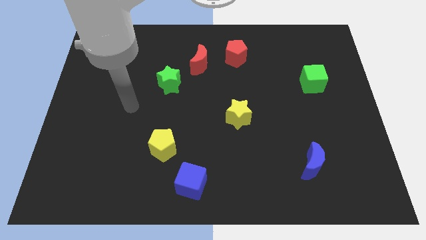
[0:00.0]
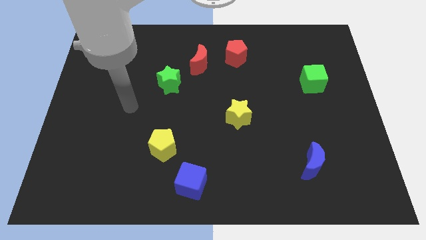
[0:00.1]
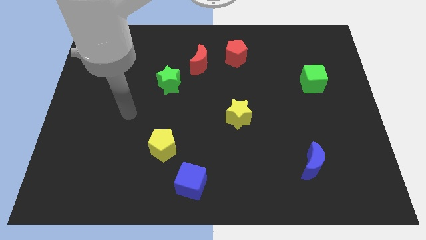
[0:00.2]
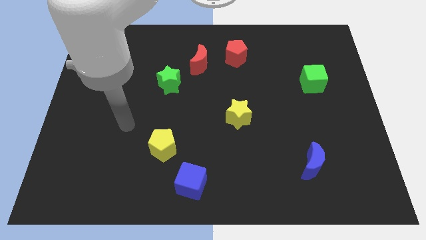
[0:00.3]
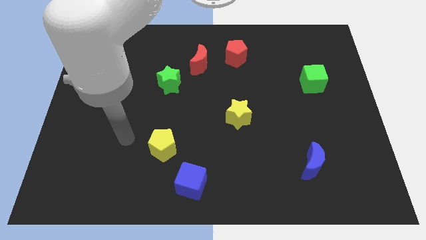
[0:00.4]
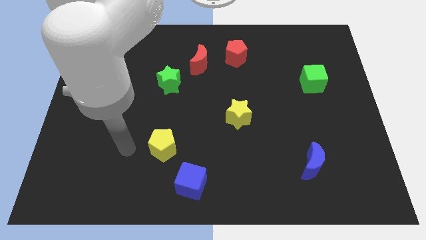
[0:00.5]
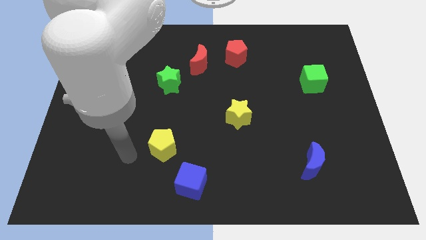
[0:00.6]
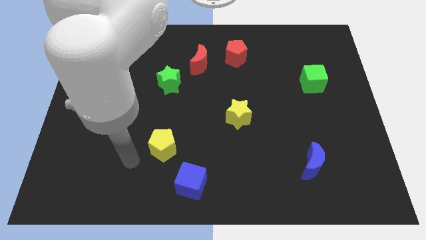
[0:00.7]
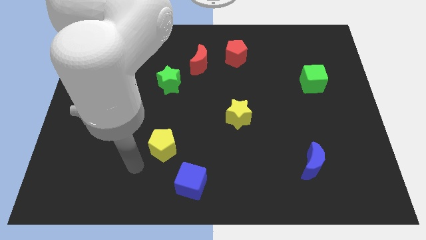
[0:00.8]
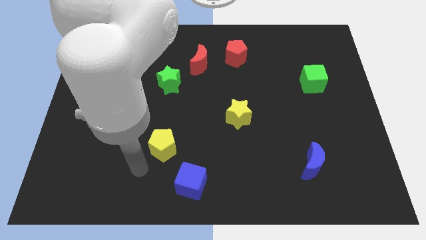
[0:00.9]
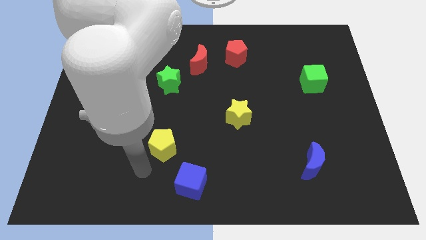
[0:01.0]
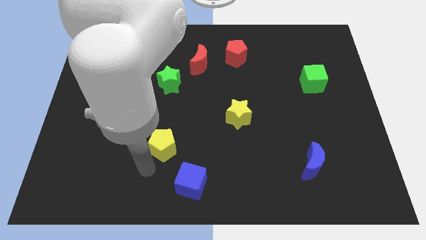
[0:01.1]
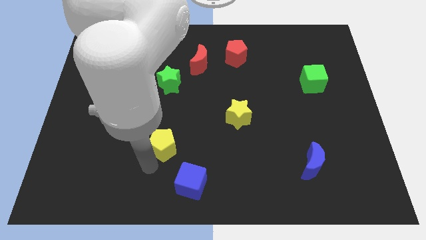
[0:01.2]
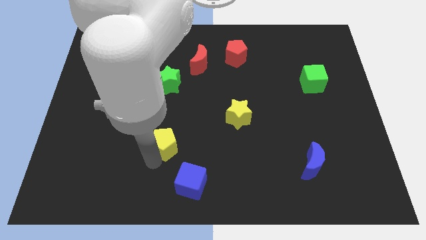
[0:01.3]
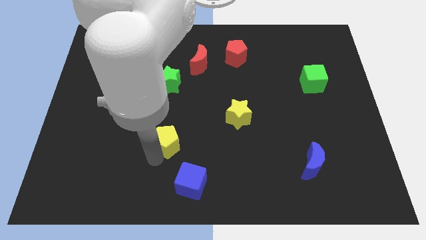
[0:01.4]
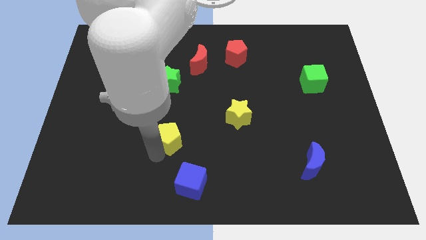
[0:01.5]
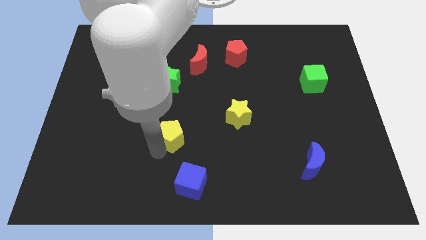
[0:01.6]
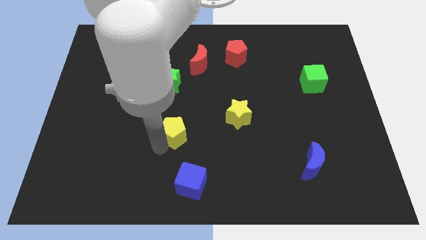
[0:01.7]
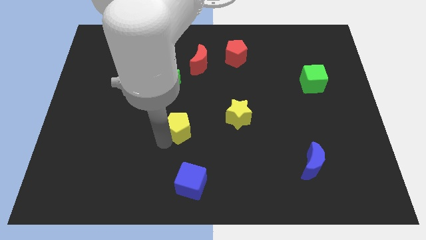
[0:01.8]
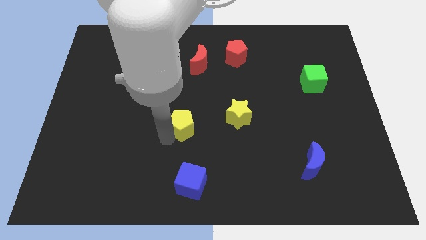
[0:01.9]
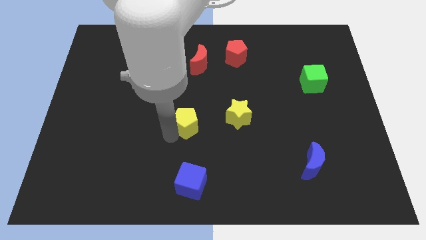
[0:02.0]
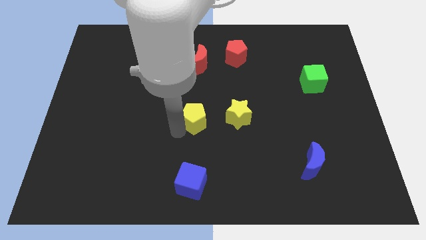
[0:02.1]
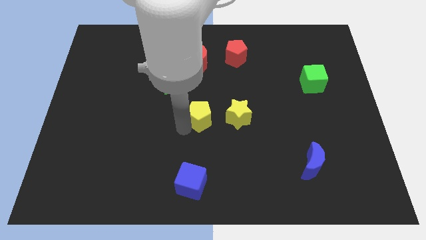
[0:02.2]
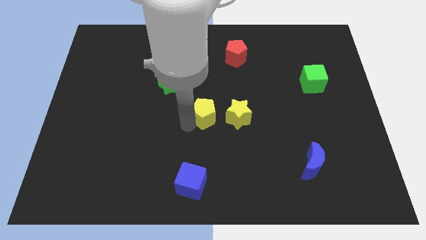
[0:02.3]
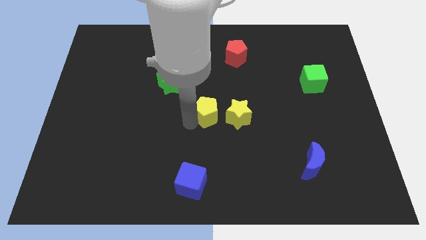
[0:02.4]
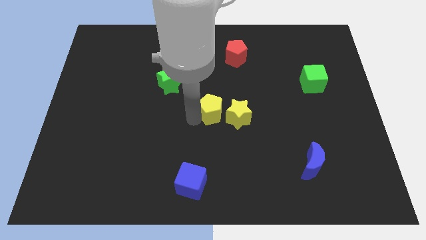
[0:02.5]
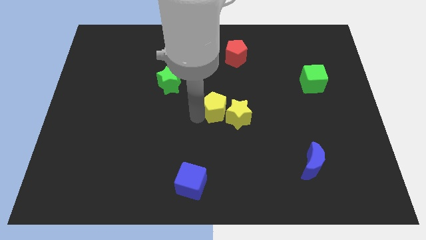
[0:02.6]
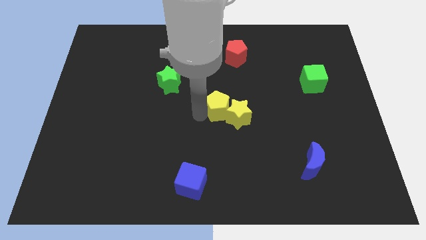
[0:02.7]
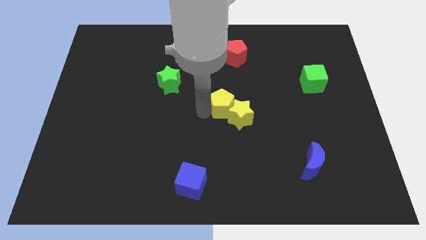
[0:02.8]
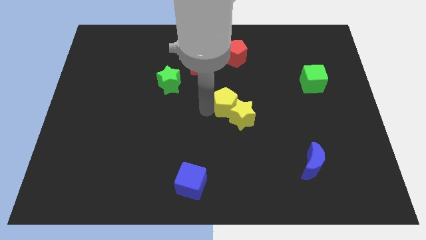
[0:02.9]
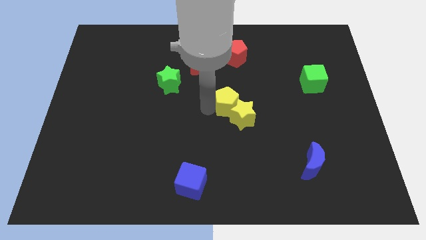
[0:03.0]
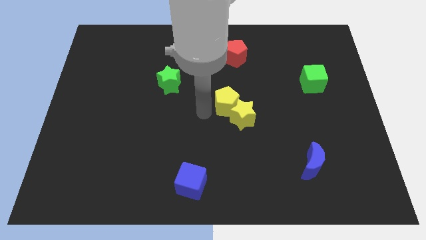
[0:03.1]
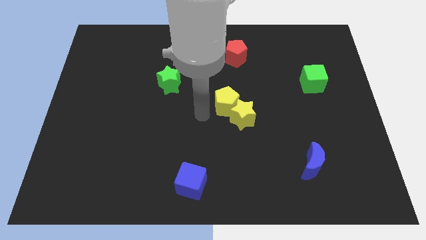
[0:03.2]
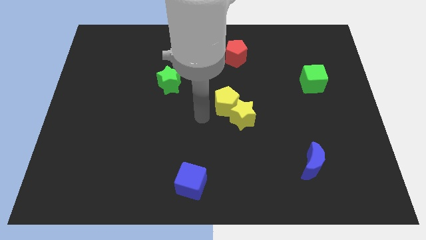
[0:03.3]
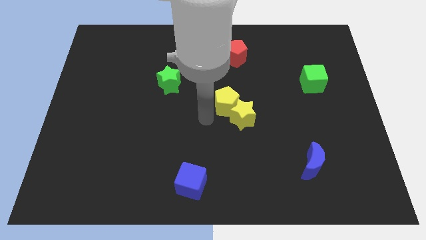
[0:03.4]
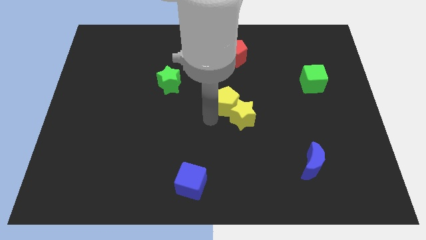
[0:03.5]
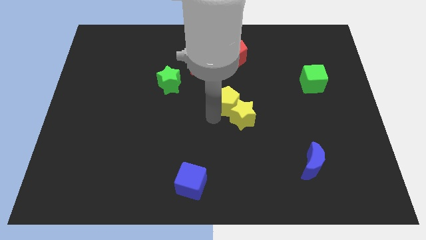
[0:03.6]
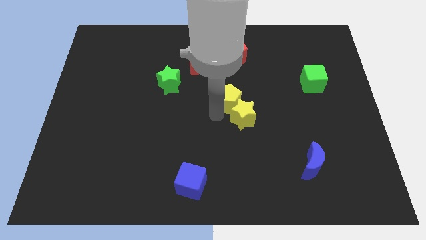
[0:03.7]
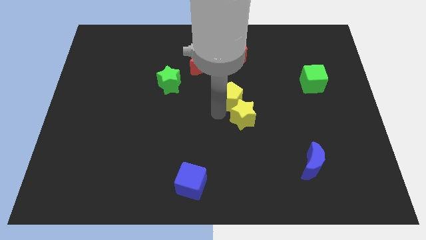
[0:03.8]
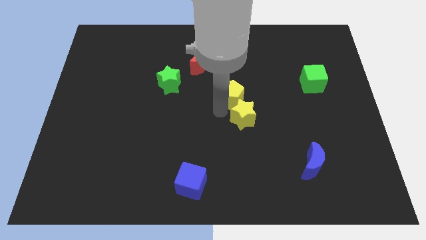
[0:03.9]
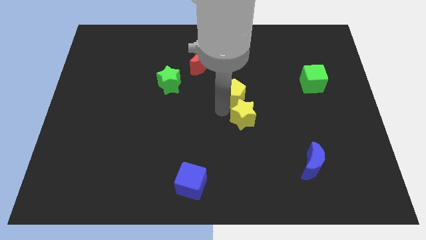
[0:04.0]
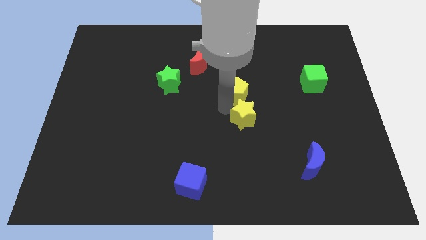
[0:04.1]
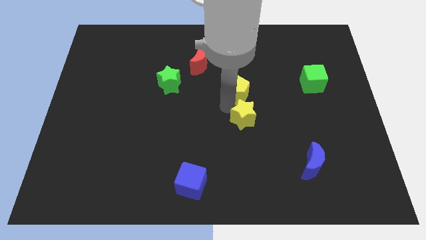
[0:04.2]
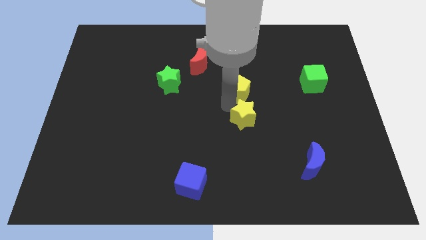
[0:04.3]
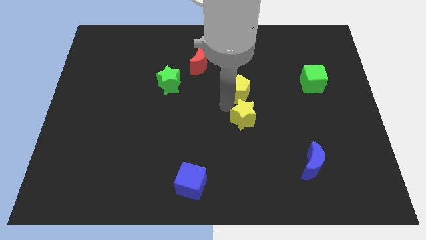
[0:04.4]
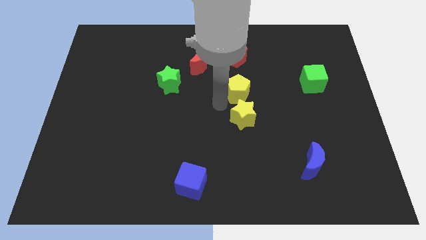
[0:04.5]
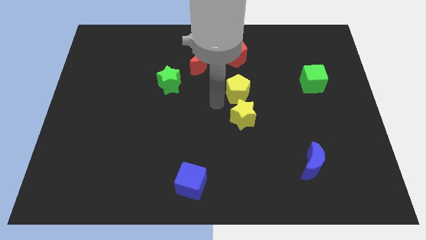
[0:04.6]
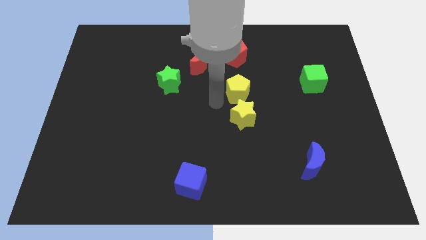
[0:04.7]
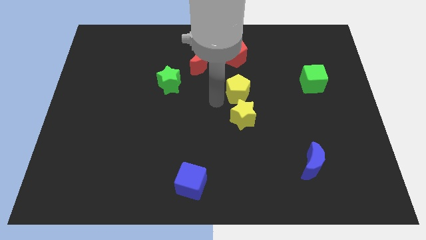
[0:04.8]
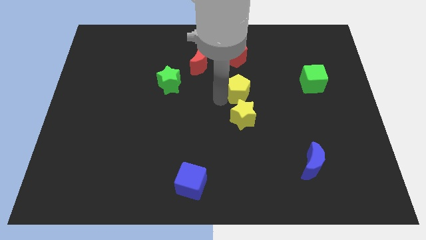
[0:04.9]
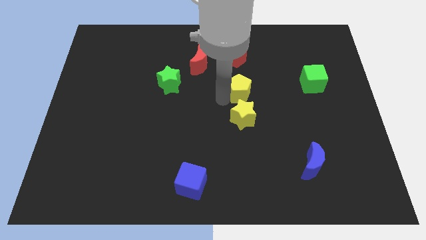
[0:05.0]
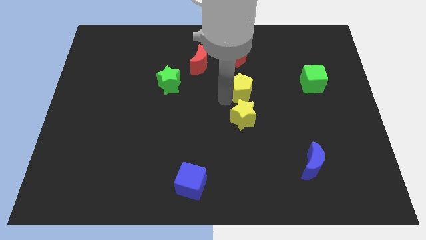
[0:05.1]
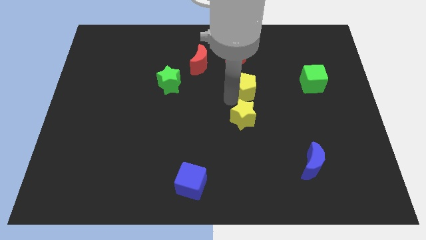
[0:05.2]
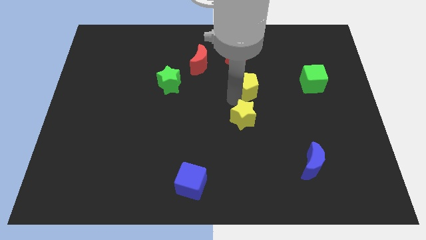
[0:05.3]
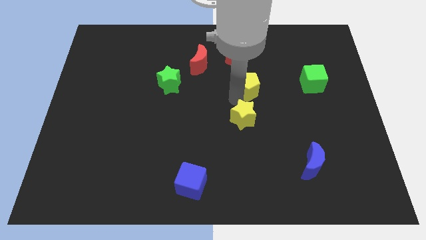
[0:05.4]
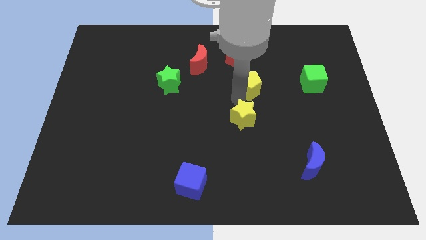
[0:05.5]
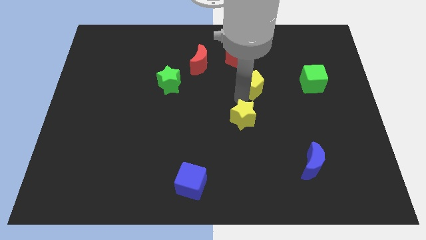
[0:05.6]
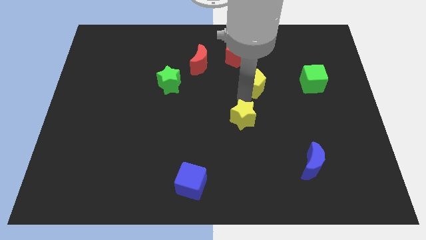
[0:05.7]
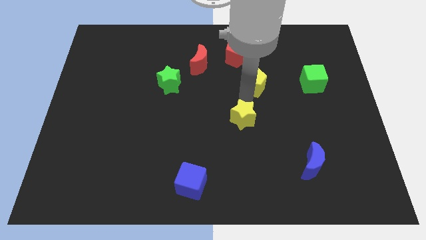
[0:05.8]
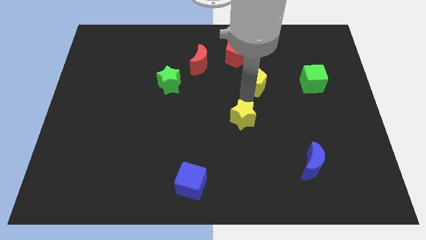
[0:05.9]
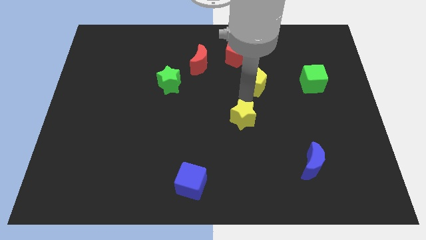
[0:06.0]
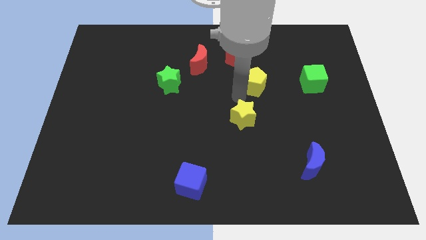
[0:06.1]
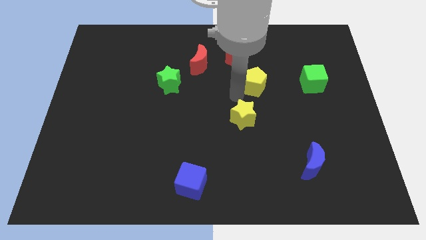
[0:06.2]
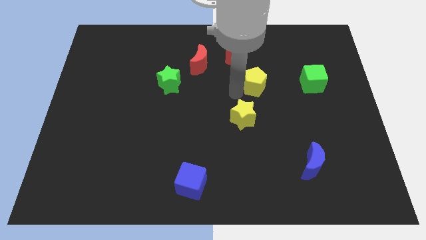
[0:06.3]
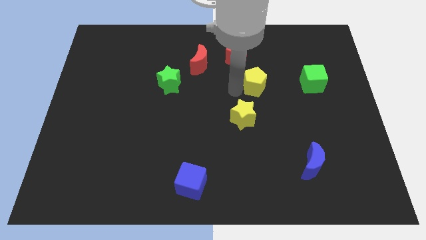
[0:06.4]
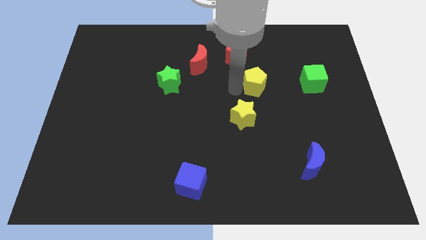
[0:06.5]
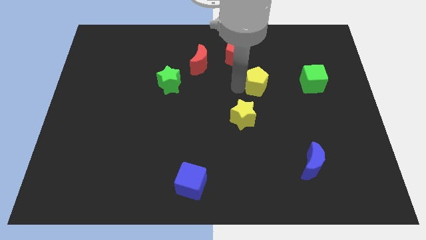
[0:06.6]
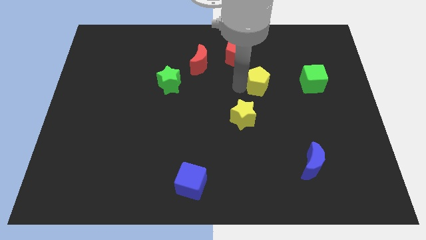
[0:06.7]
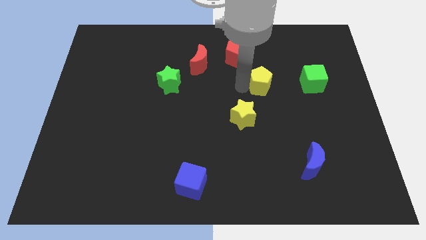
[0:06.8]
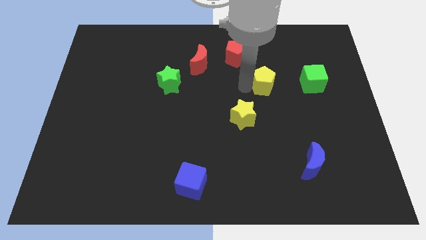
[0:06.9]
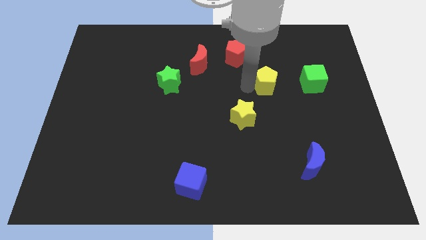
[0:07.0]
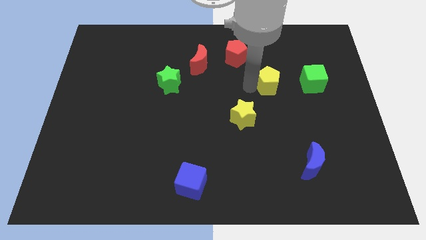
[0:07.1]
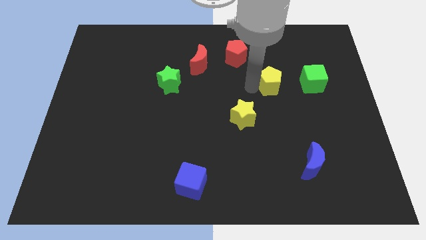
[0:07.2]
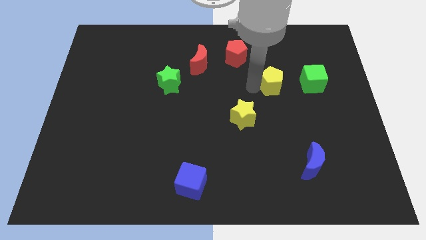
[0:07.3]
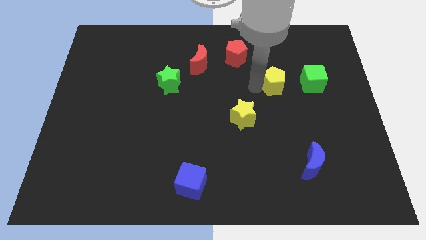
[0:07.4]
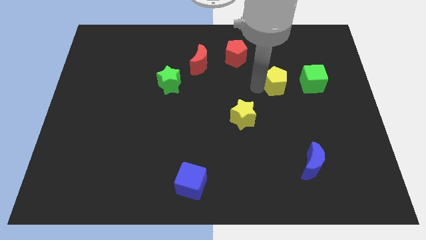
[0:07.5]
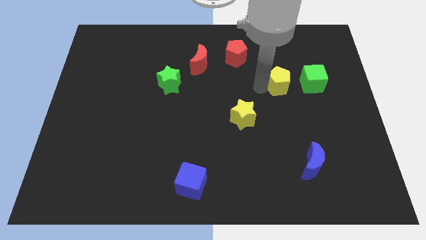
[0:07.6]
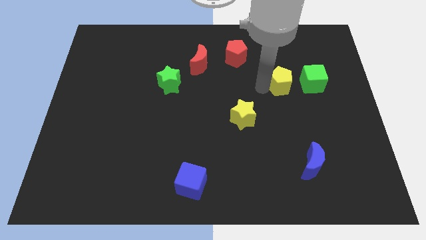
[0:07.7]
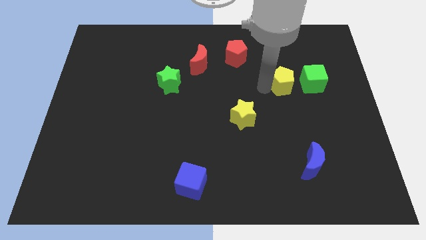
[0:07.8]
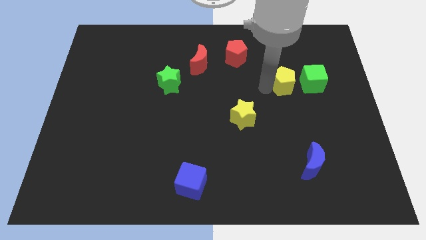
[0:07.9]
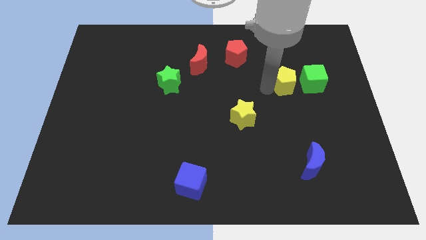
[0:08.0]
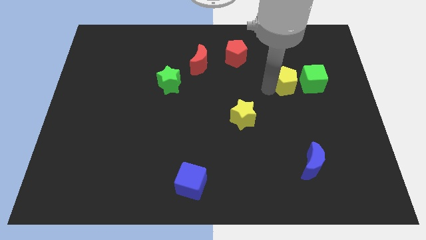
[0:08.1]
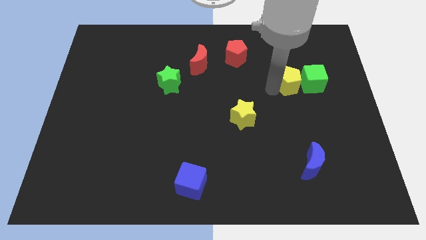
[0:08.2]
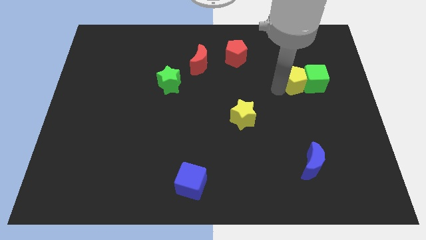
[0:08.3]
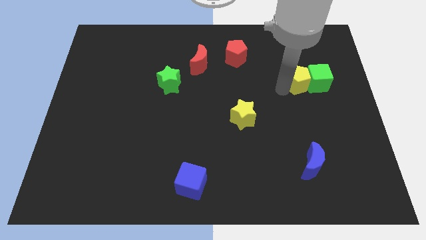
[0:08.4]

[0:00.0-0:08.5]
slide the yellow pentagon close to the green cube
